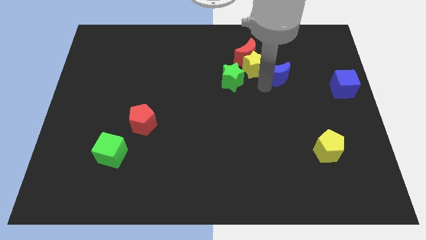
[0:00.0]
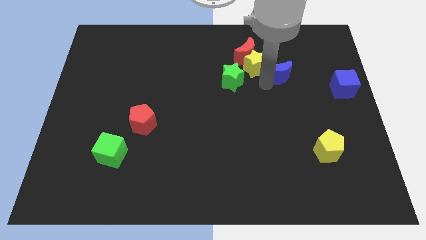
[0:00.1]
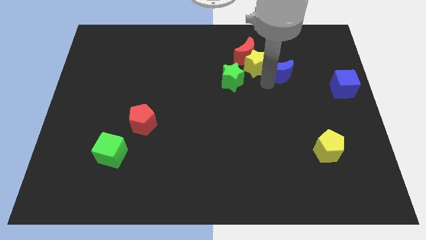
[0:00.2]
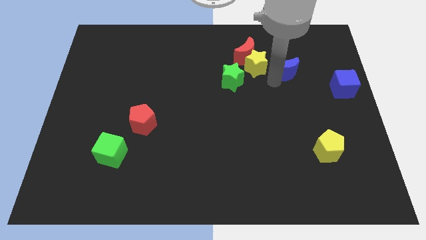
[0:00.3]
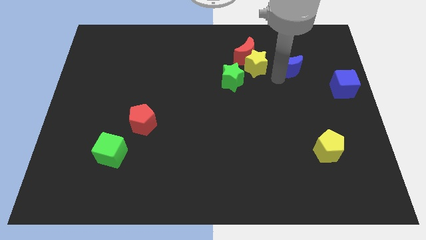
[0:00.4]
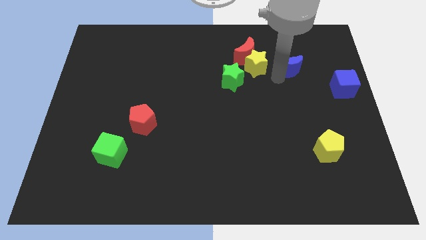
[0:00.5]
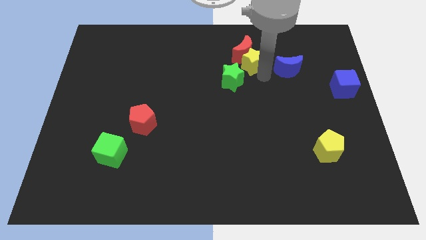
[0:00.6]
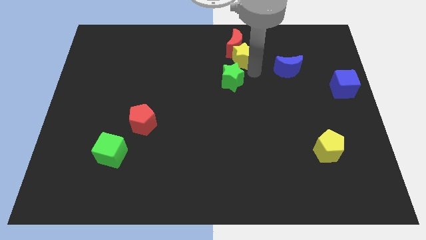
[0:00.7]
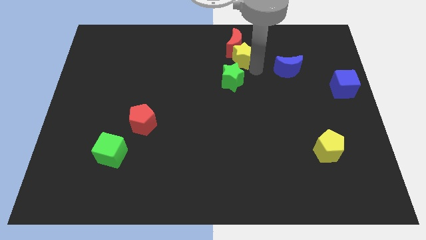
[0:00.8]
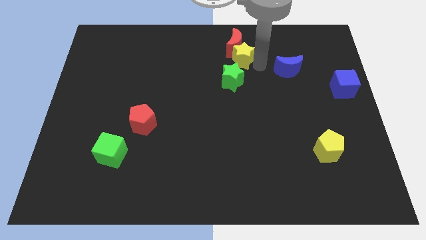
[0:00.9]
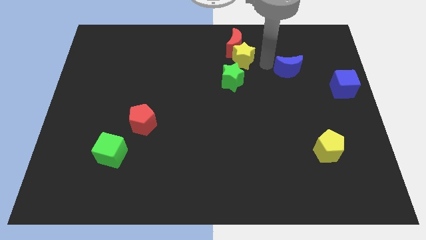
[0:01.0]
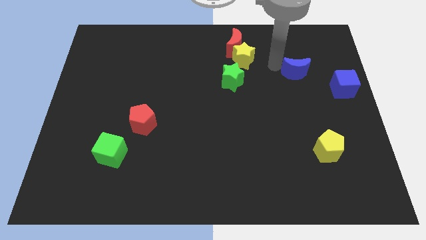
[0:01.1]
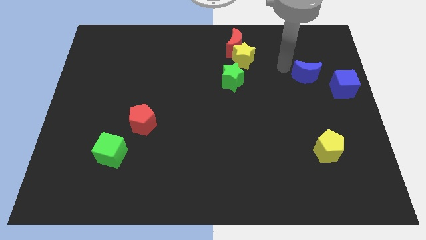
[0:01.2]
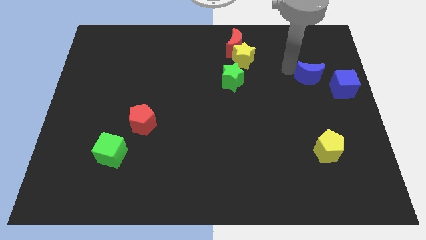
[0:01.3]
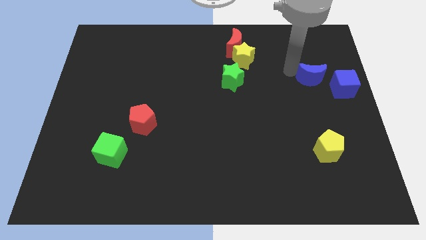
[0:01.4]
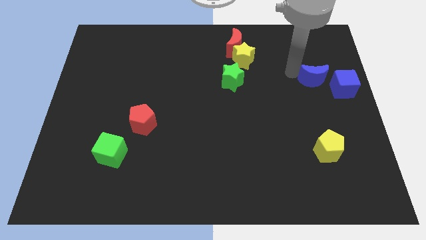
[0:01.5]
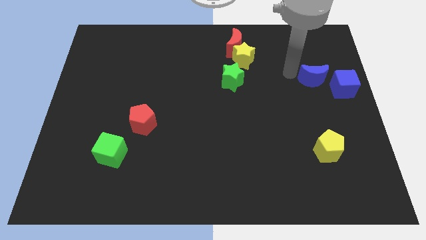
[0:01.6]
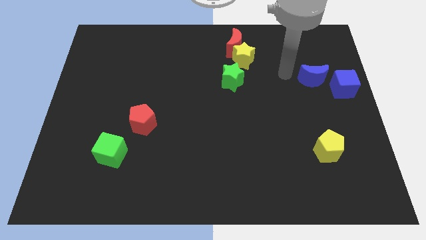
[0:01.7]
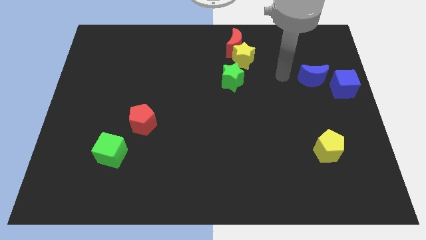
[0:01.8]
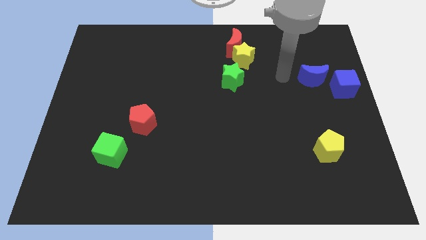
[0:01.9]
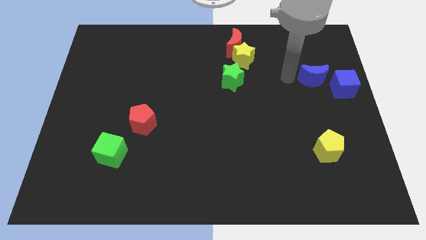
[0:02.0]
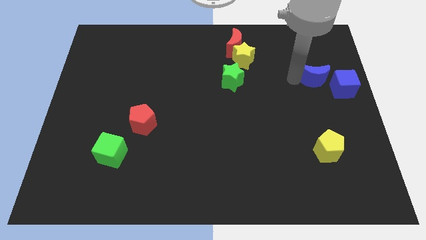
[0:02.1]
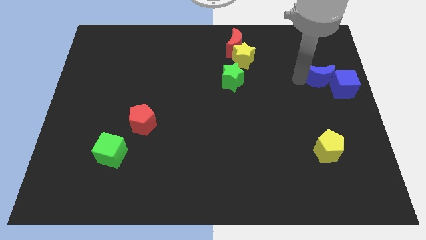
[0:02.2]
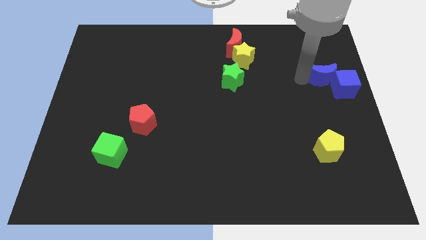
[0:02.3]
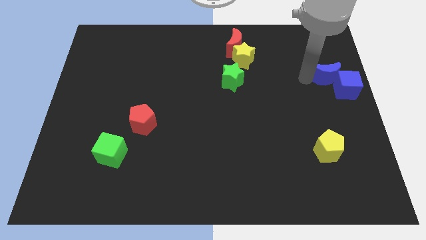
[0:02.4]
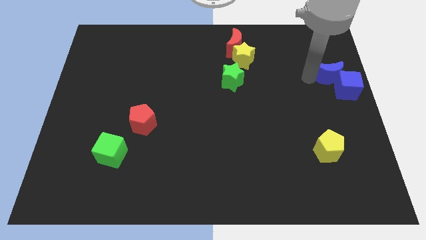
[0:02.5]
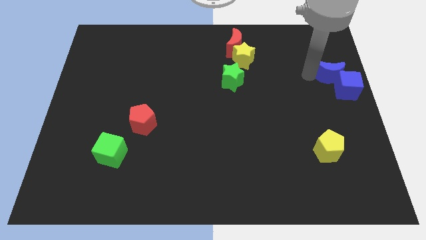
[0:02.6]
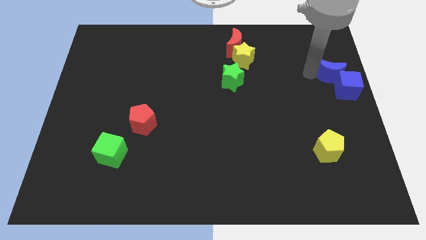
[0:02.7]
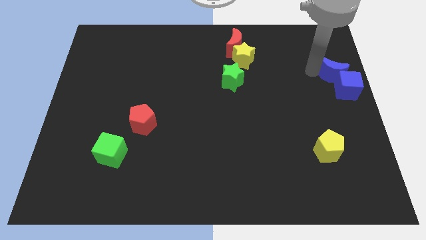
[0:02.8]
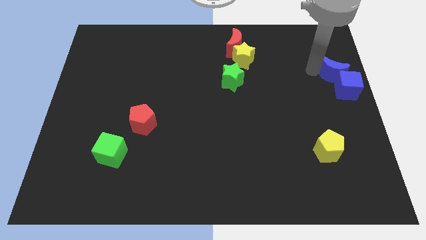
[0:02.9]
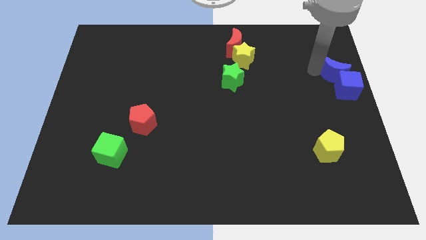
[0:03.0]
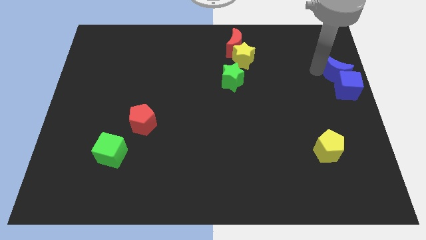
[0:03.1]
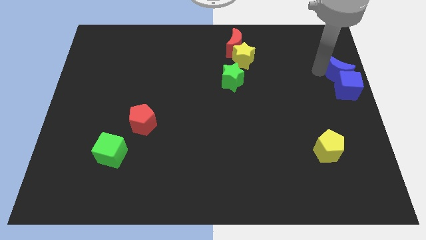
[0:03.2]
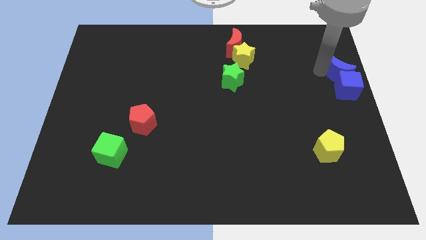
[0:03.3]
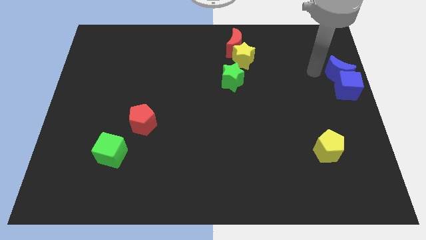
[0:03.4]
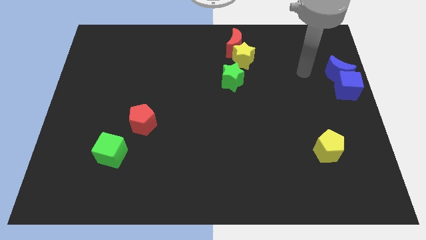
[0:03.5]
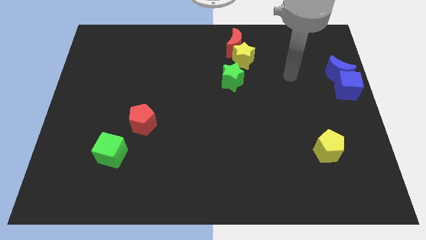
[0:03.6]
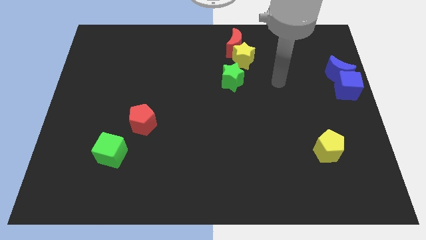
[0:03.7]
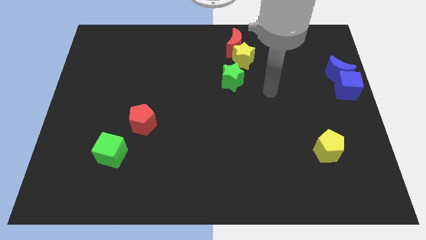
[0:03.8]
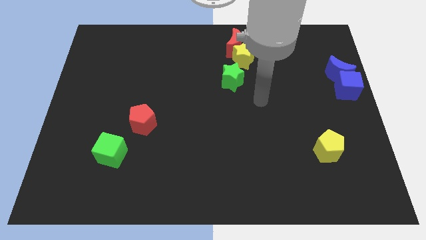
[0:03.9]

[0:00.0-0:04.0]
place the blue crescent at the top side of the blue cube

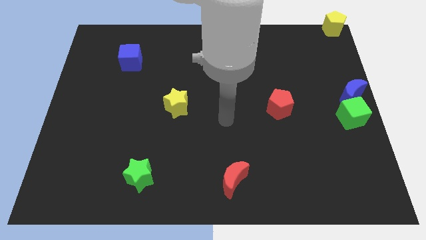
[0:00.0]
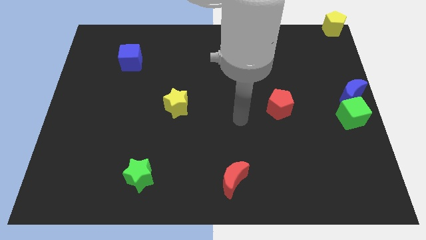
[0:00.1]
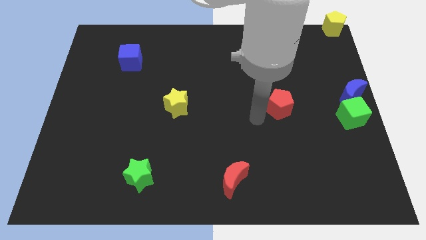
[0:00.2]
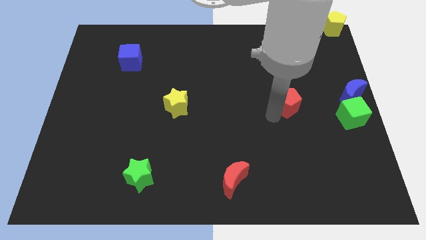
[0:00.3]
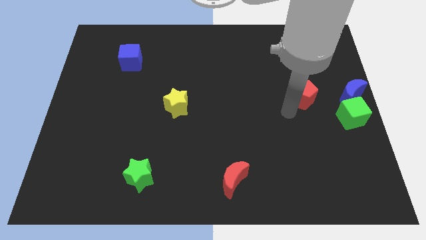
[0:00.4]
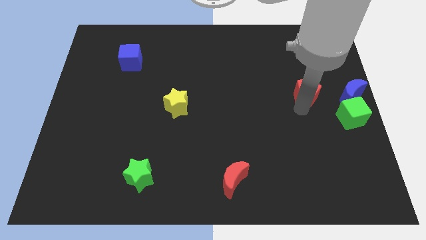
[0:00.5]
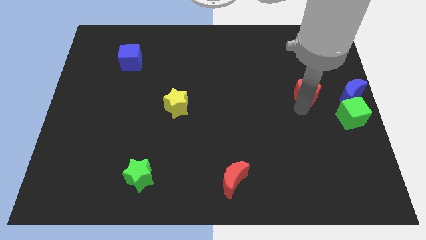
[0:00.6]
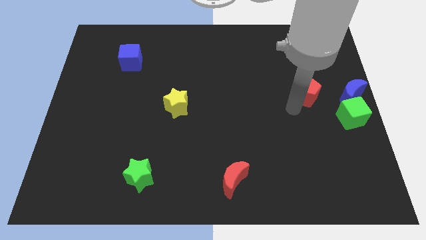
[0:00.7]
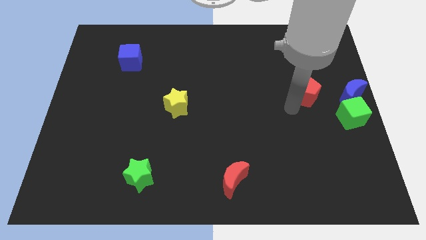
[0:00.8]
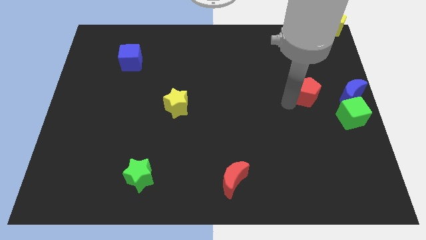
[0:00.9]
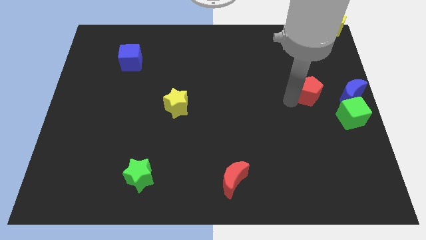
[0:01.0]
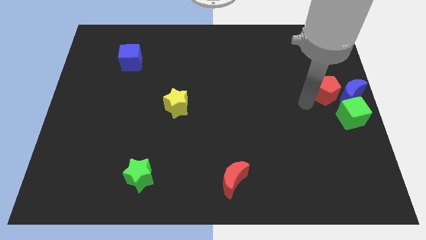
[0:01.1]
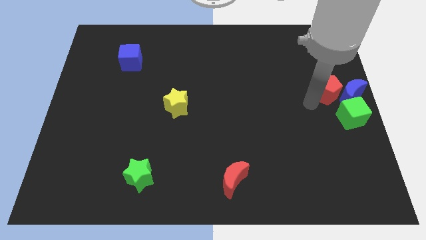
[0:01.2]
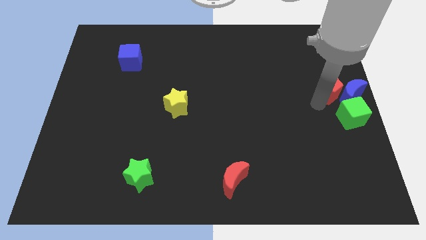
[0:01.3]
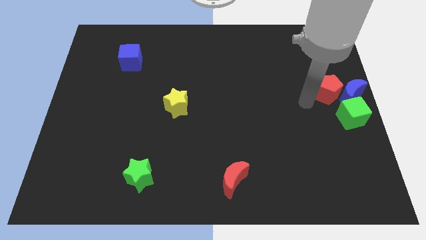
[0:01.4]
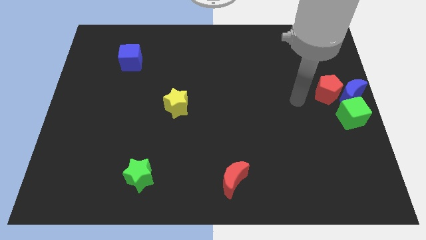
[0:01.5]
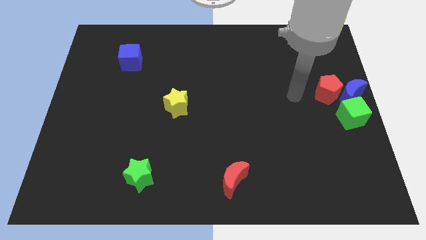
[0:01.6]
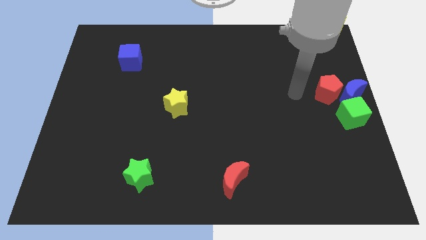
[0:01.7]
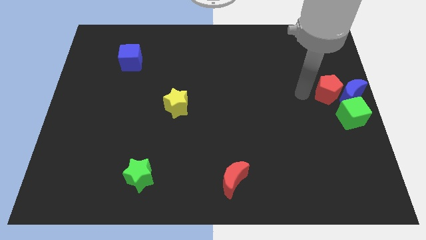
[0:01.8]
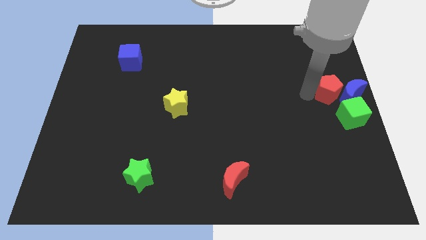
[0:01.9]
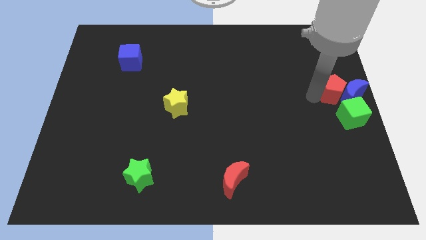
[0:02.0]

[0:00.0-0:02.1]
push the red pentagon into blue crescent

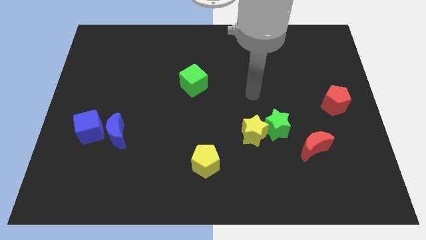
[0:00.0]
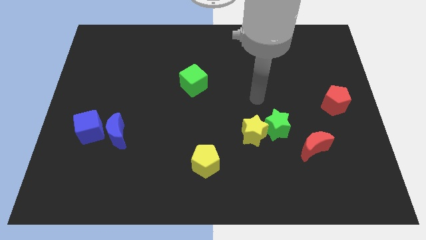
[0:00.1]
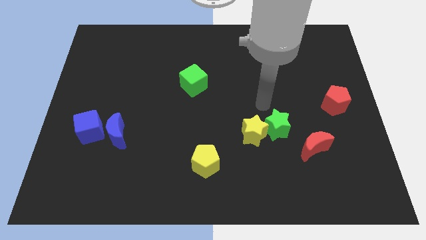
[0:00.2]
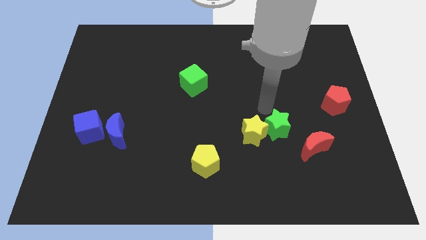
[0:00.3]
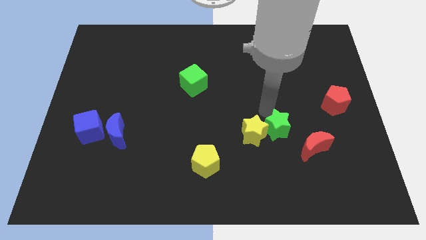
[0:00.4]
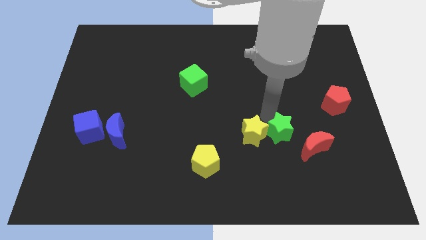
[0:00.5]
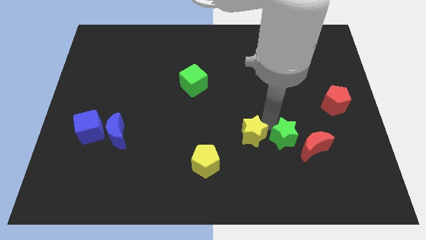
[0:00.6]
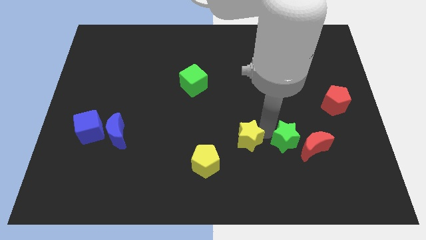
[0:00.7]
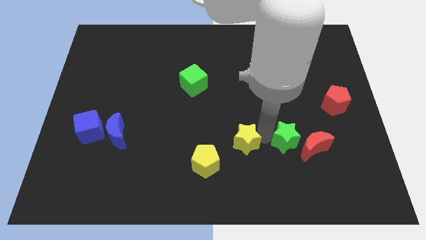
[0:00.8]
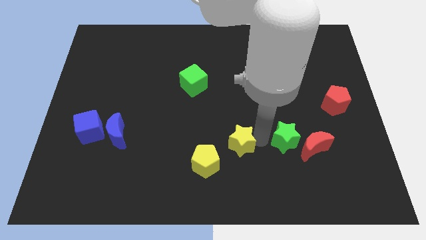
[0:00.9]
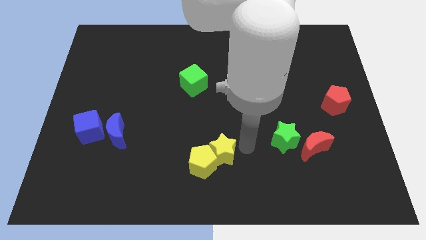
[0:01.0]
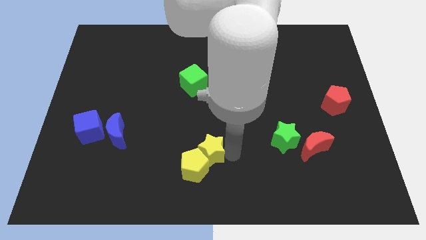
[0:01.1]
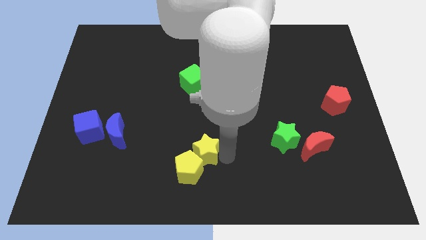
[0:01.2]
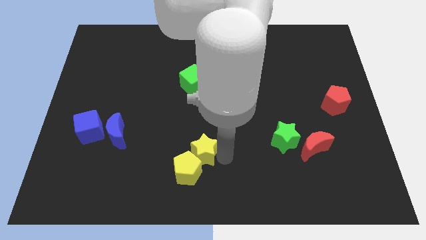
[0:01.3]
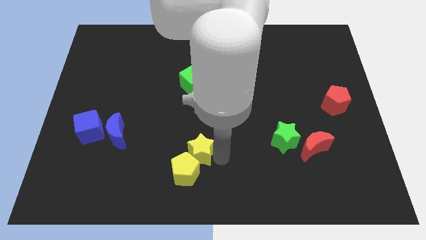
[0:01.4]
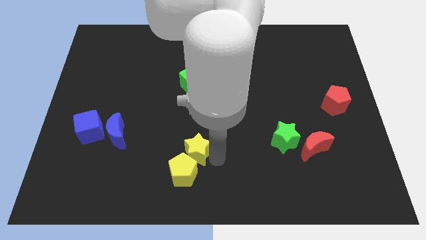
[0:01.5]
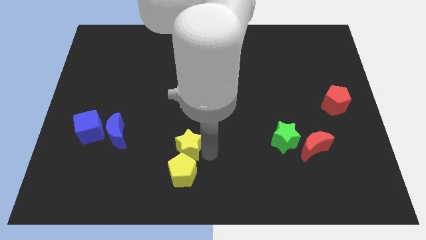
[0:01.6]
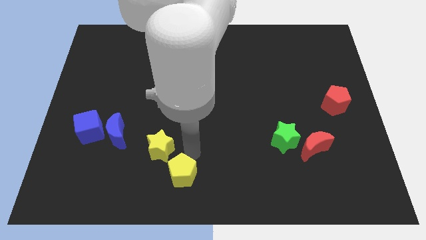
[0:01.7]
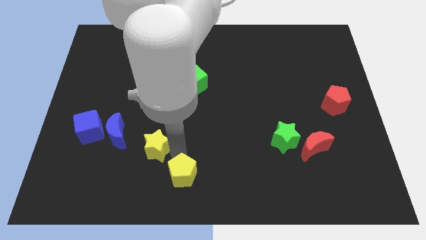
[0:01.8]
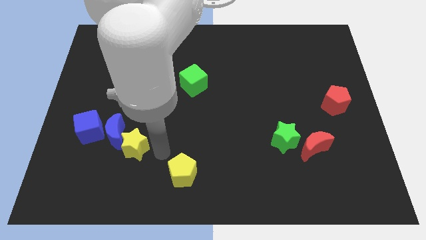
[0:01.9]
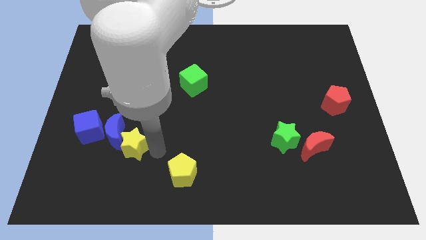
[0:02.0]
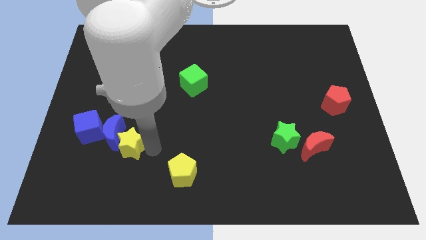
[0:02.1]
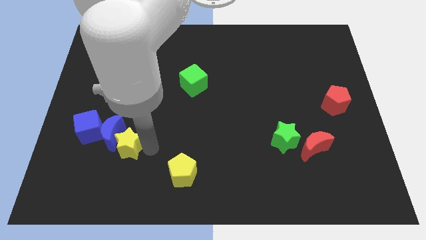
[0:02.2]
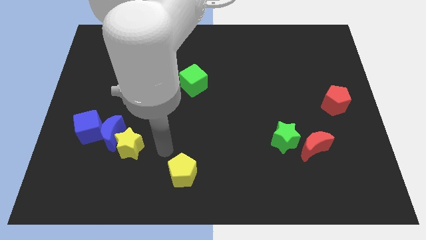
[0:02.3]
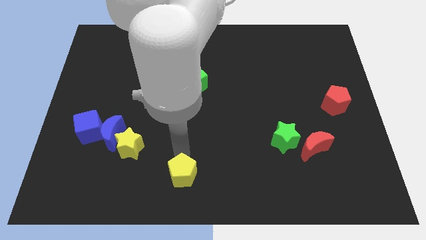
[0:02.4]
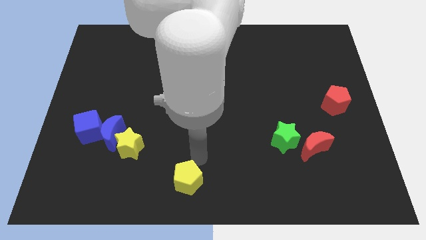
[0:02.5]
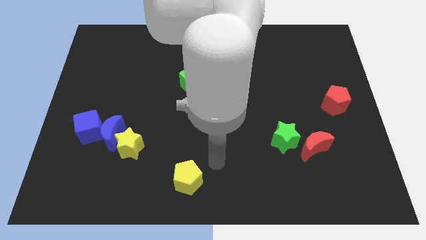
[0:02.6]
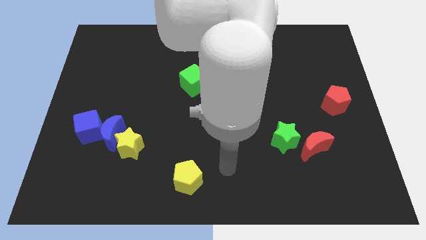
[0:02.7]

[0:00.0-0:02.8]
push the yellow star into the blue moon

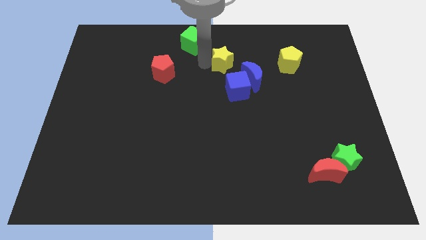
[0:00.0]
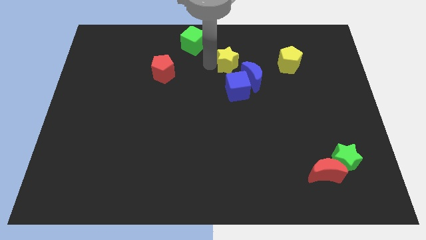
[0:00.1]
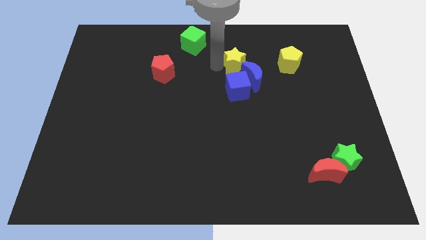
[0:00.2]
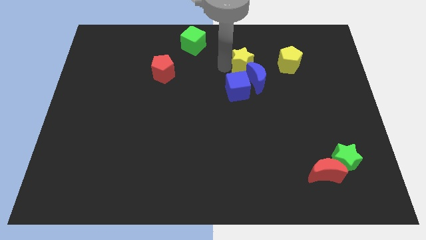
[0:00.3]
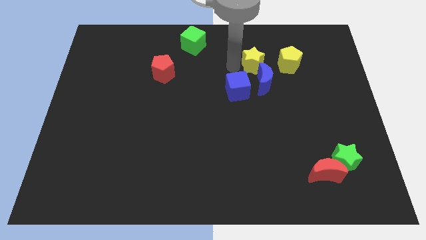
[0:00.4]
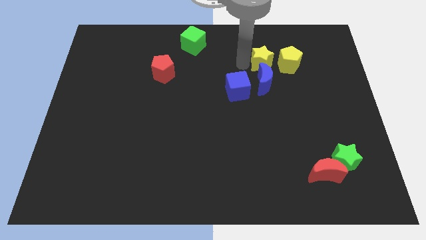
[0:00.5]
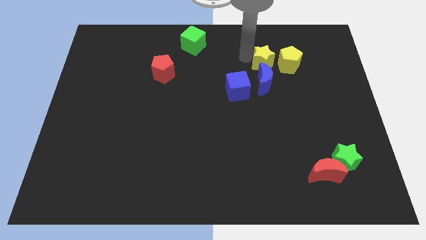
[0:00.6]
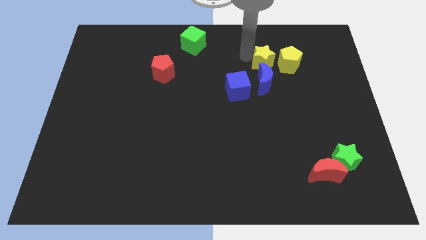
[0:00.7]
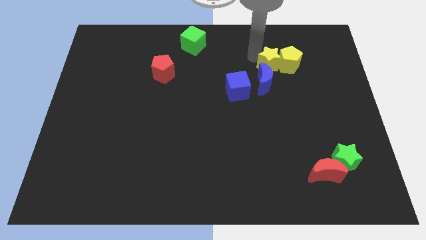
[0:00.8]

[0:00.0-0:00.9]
move the yellow star into the yellow pentagon
